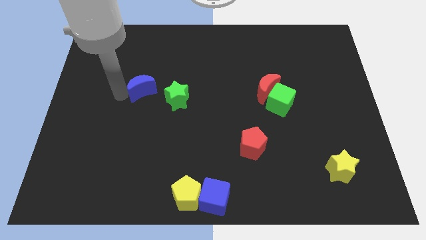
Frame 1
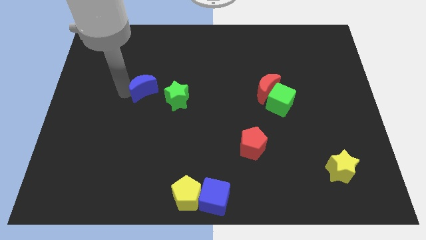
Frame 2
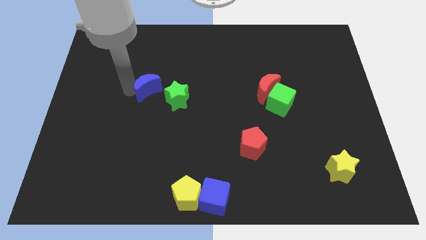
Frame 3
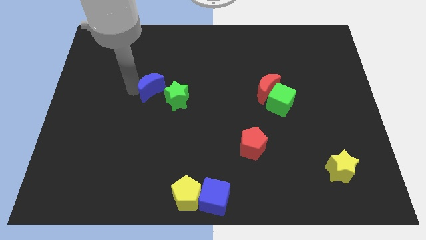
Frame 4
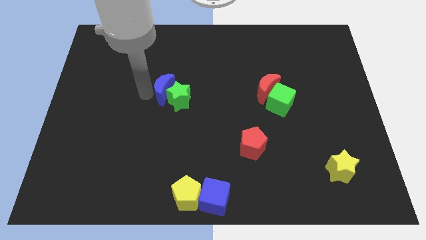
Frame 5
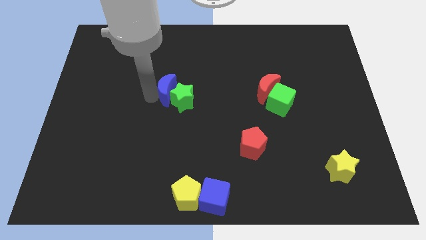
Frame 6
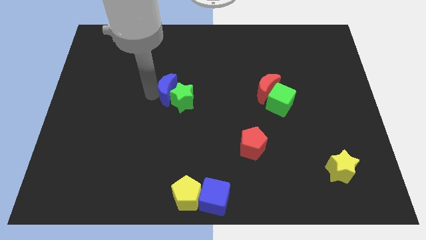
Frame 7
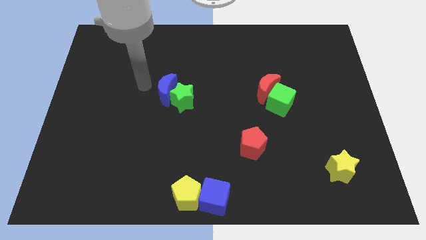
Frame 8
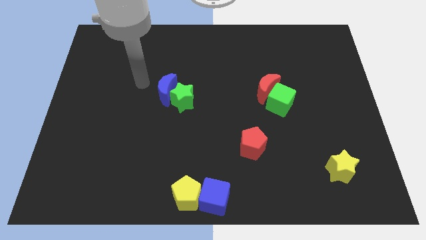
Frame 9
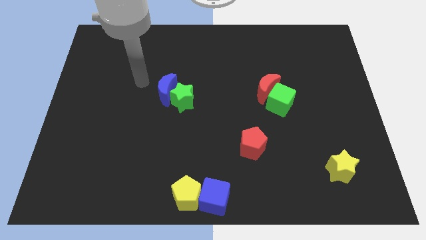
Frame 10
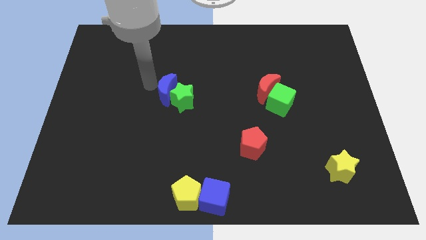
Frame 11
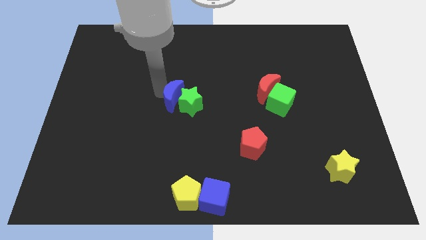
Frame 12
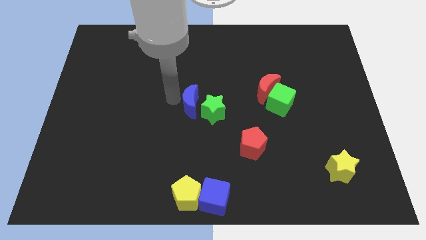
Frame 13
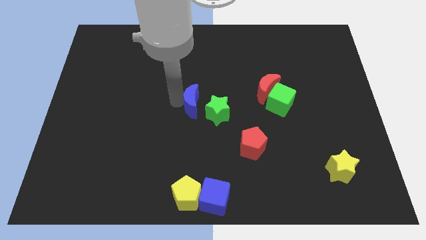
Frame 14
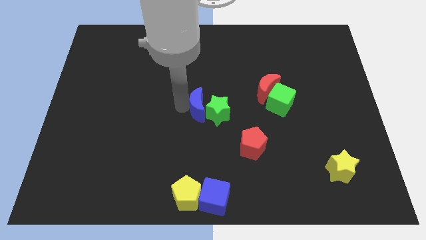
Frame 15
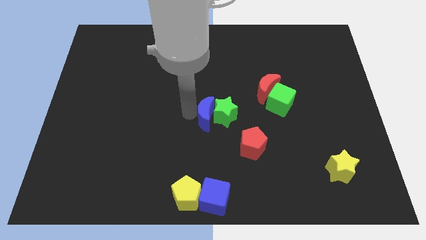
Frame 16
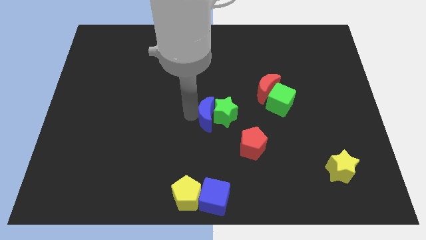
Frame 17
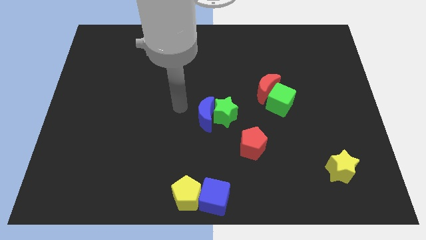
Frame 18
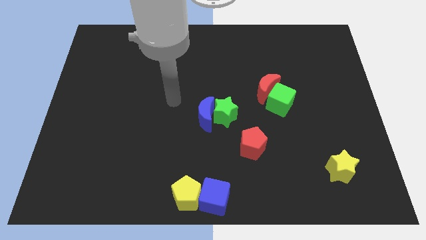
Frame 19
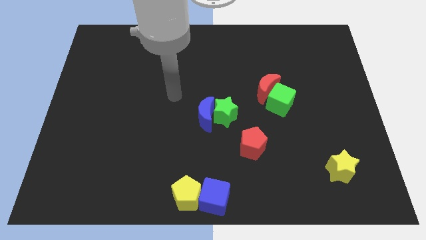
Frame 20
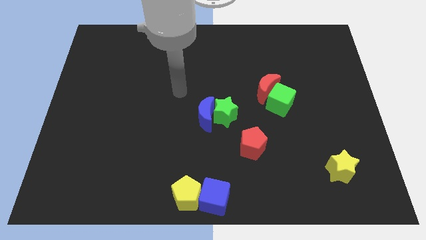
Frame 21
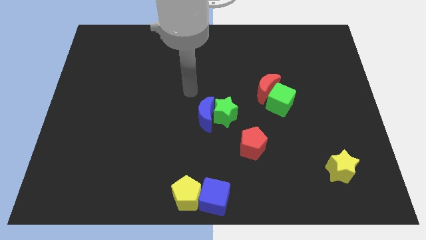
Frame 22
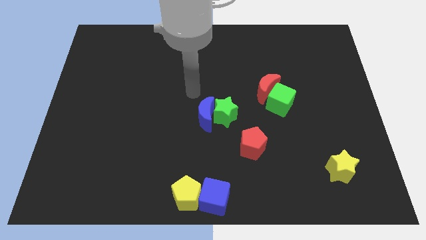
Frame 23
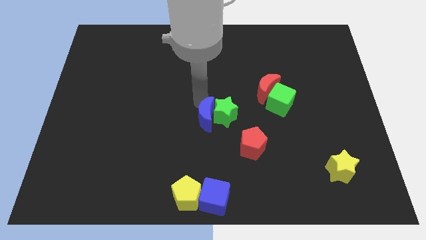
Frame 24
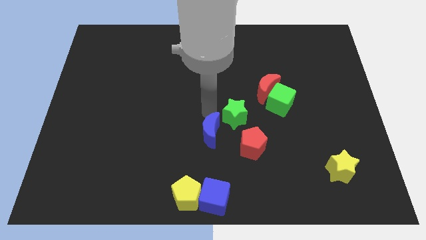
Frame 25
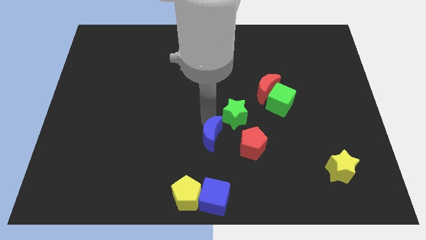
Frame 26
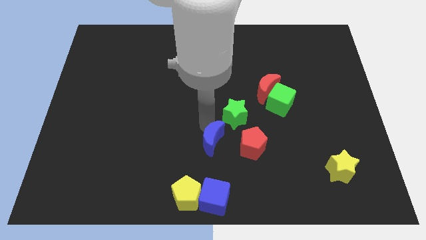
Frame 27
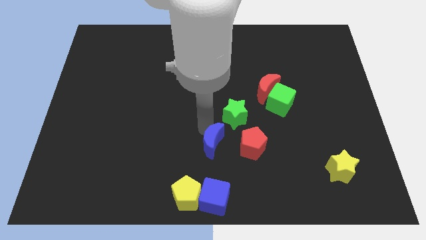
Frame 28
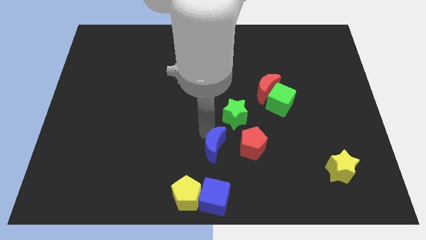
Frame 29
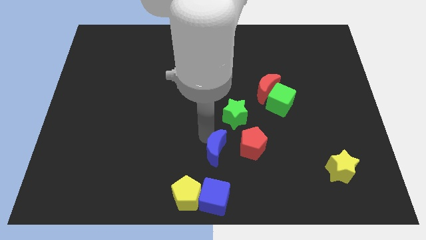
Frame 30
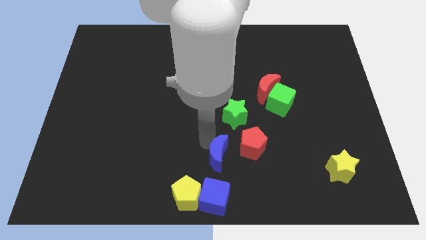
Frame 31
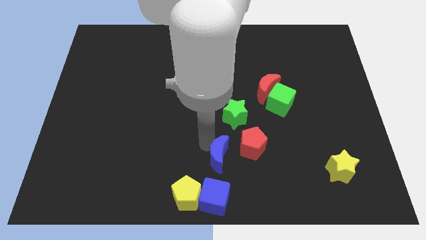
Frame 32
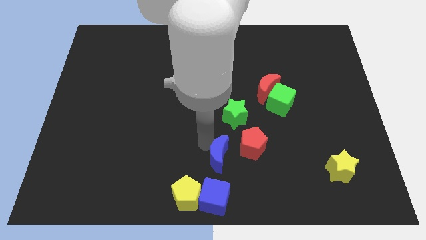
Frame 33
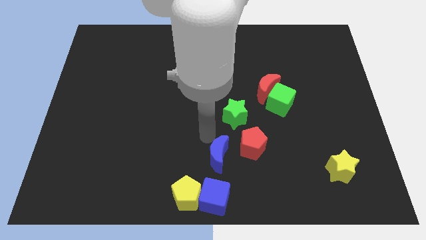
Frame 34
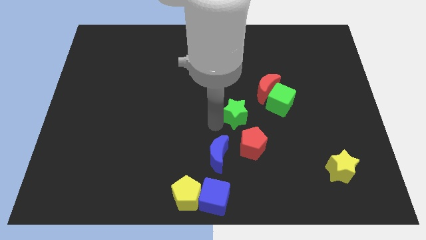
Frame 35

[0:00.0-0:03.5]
push the blue crescent to the top of the blue cube

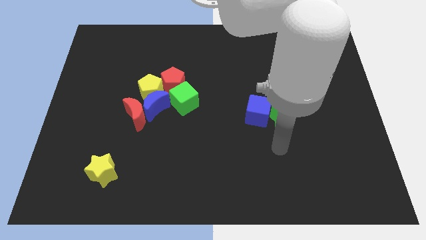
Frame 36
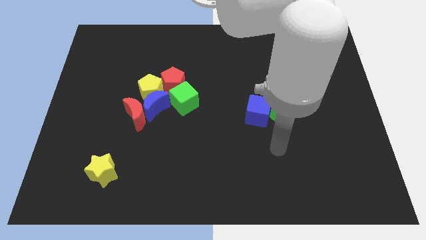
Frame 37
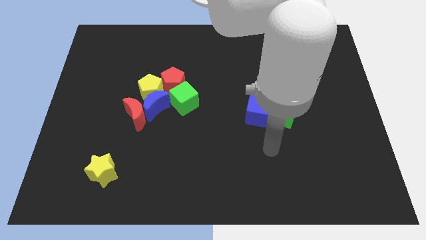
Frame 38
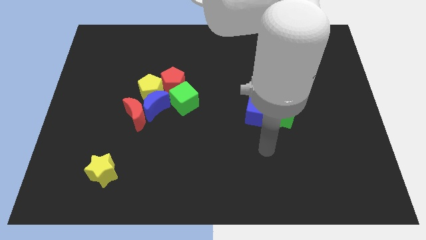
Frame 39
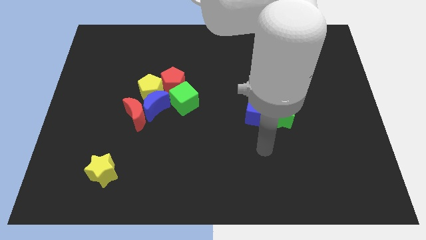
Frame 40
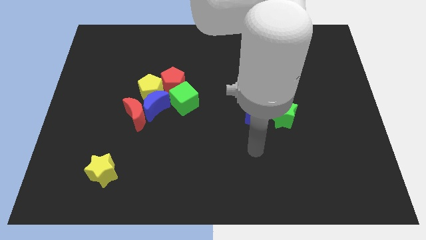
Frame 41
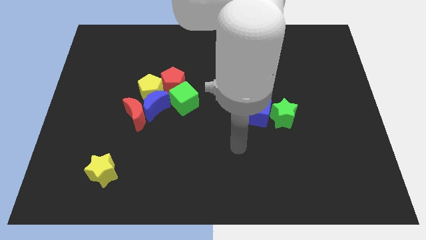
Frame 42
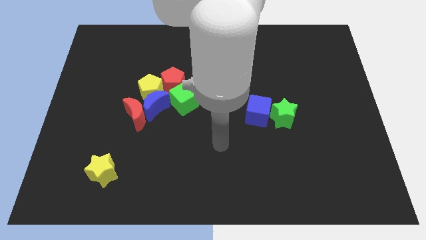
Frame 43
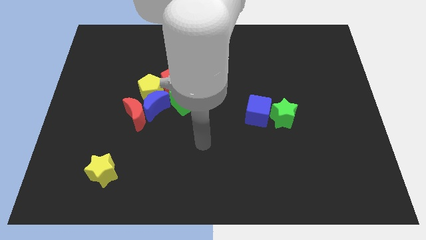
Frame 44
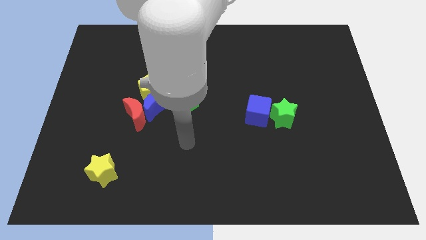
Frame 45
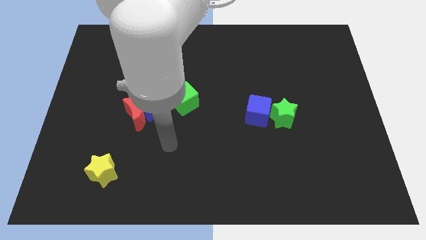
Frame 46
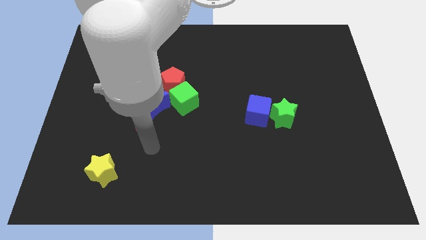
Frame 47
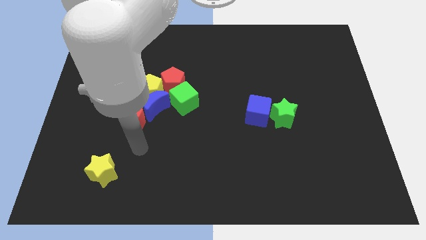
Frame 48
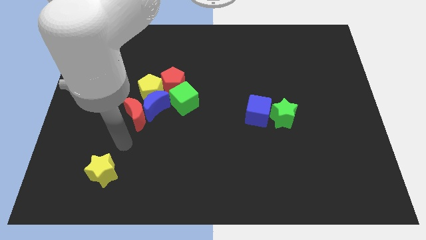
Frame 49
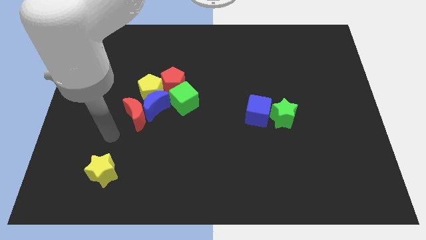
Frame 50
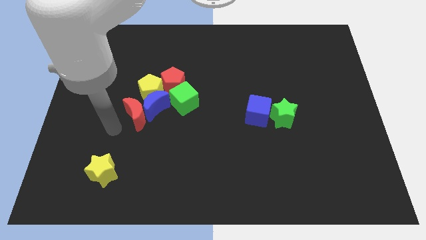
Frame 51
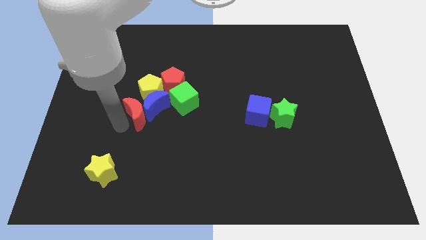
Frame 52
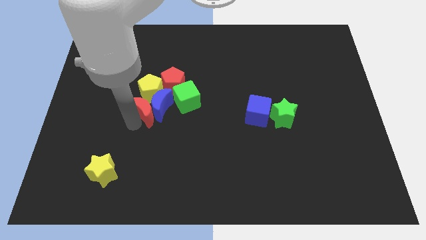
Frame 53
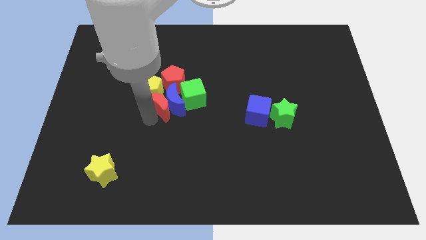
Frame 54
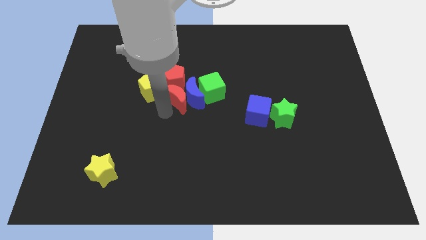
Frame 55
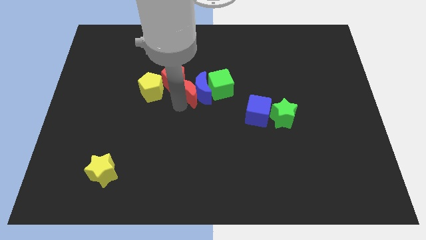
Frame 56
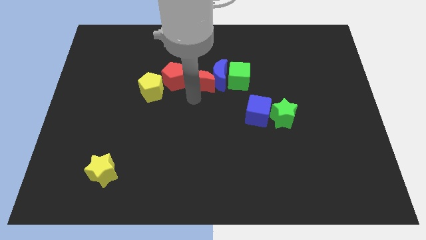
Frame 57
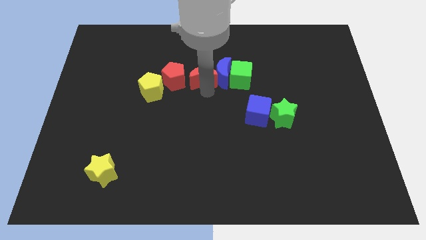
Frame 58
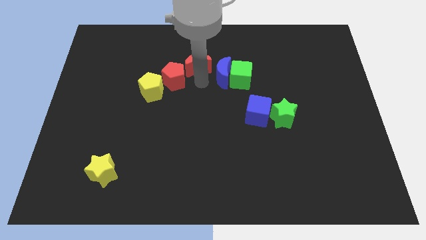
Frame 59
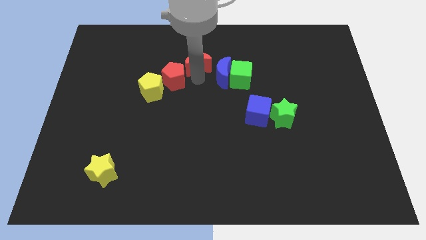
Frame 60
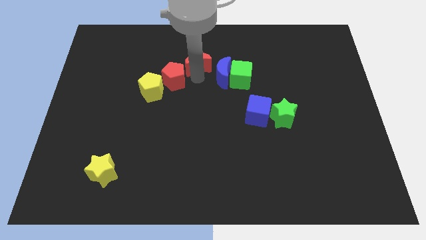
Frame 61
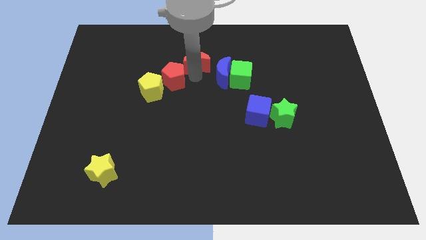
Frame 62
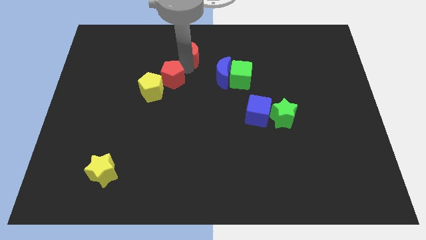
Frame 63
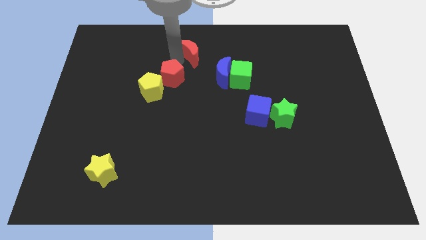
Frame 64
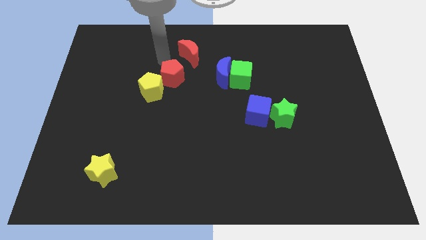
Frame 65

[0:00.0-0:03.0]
push the red crescent towards the top center

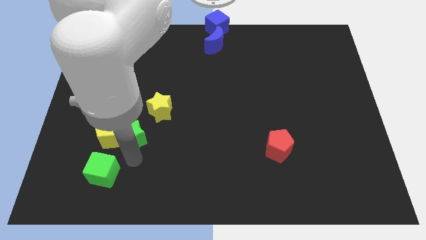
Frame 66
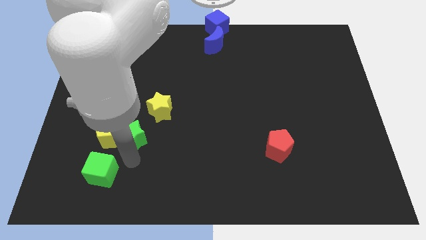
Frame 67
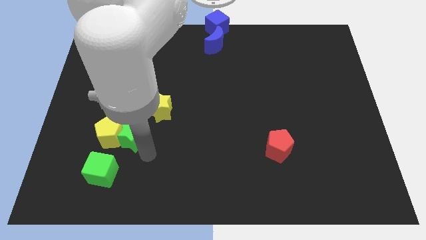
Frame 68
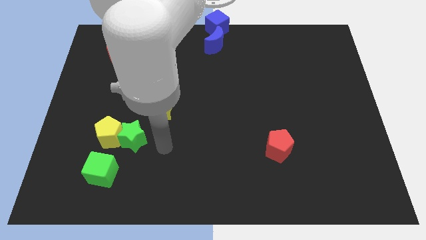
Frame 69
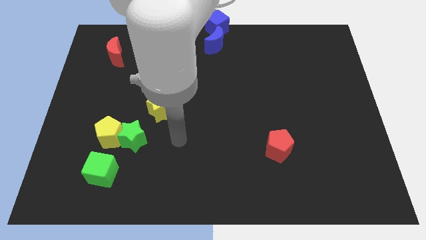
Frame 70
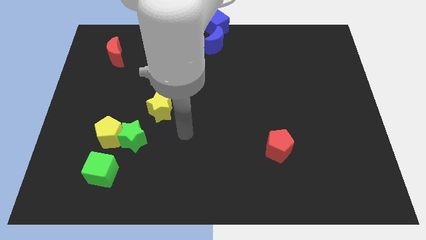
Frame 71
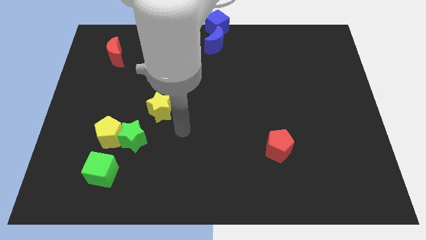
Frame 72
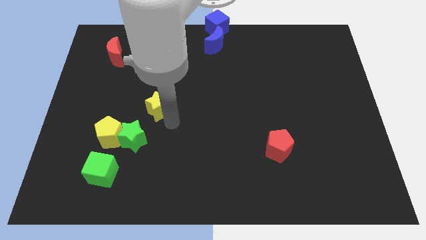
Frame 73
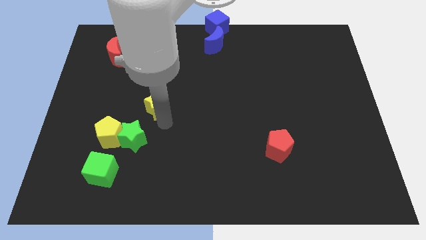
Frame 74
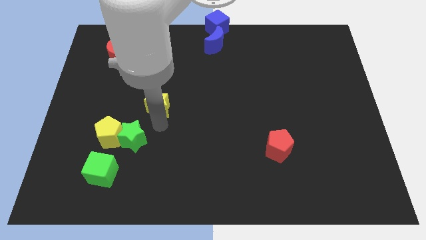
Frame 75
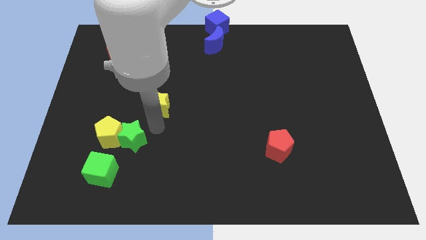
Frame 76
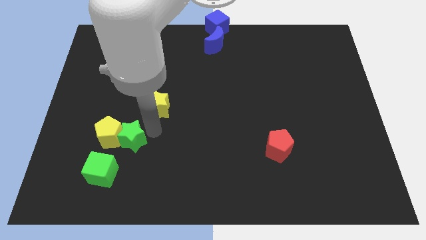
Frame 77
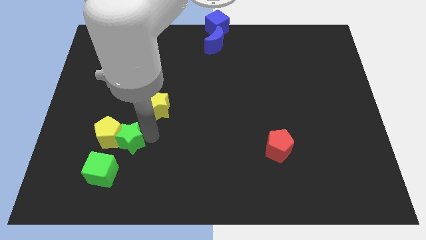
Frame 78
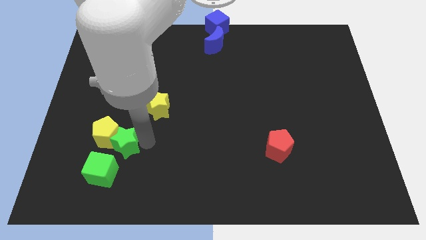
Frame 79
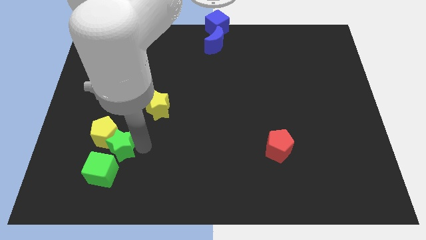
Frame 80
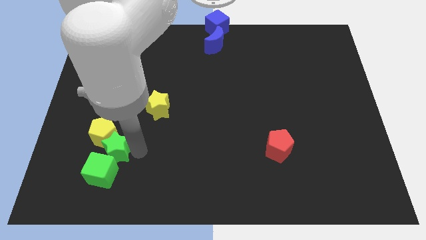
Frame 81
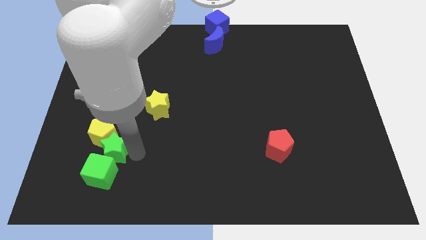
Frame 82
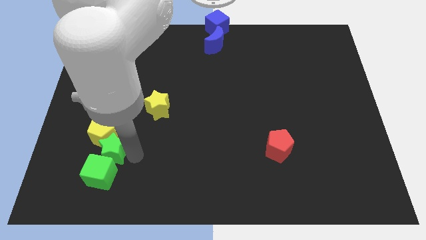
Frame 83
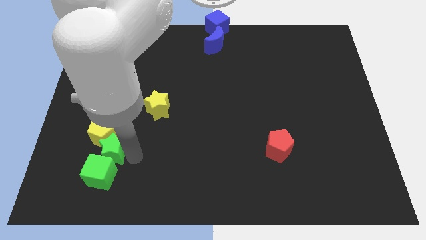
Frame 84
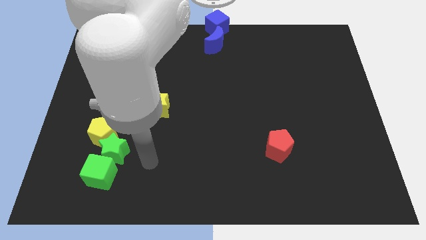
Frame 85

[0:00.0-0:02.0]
move green star in between yellow pentagon and green cube

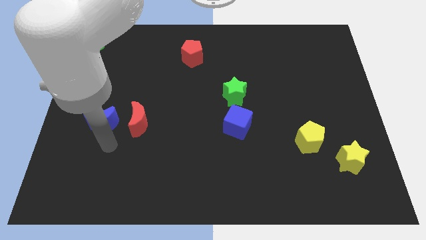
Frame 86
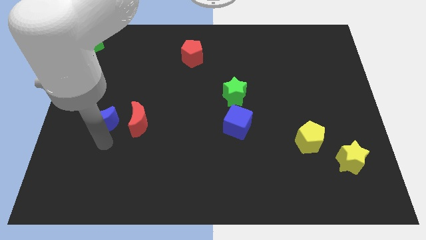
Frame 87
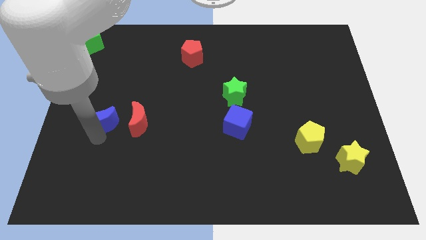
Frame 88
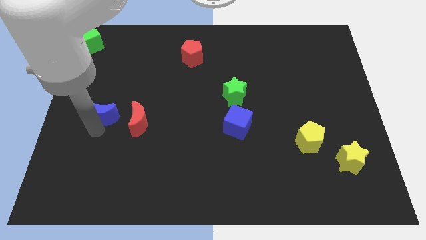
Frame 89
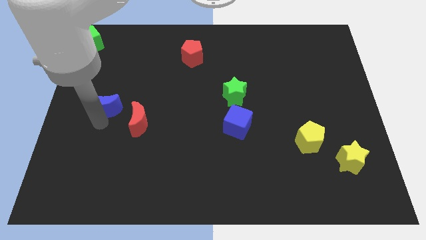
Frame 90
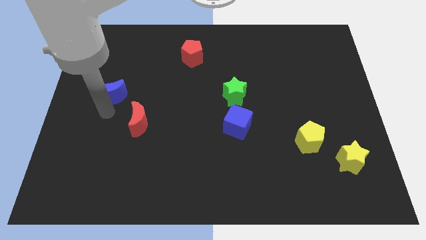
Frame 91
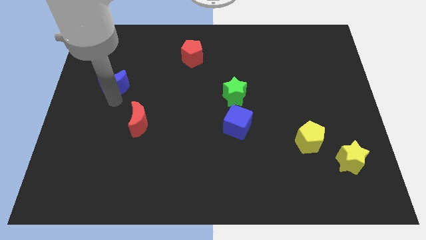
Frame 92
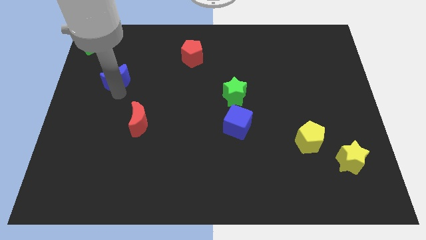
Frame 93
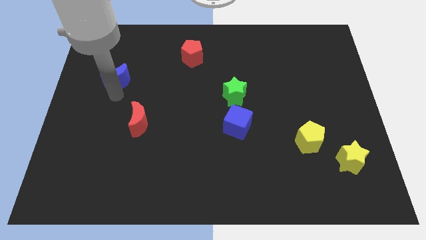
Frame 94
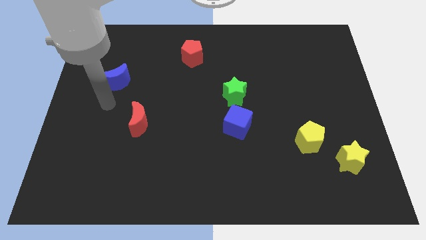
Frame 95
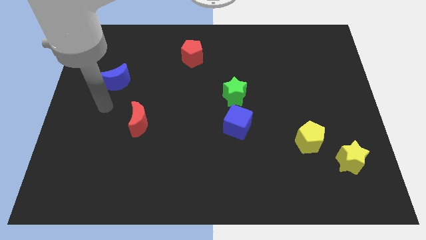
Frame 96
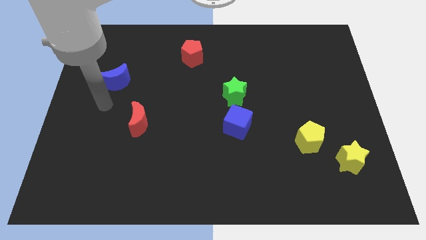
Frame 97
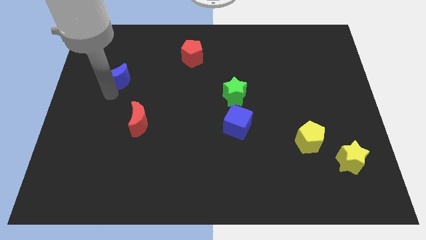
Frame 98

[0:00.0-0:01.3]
slide the blue moon diagonally top left to the red moon
